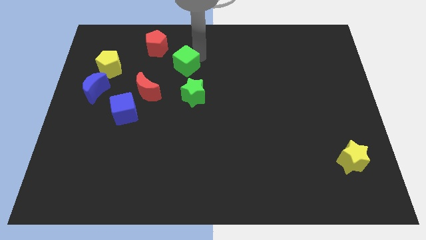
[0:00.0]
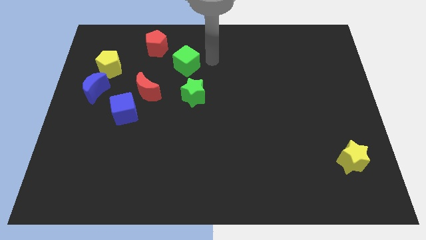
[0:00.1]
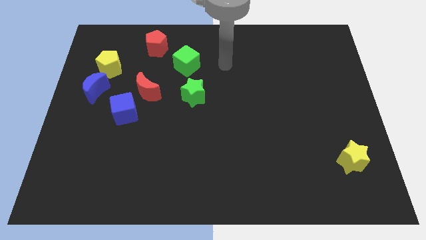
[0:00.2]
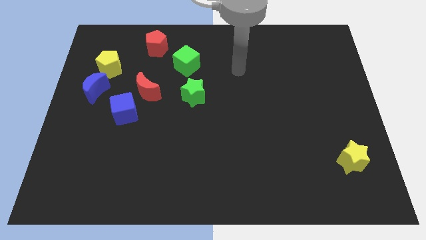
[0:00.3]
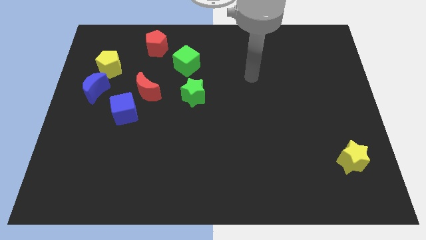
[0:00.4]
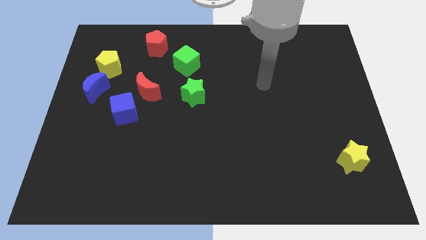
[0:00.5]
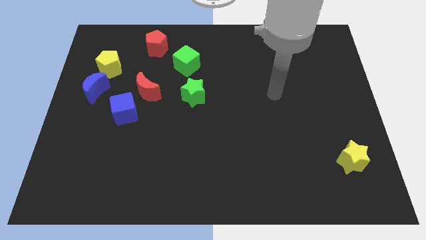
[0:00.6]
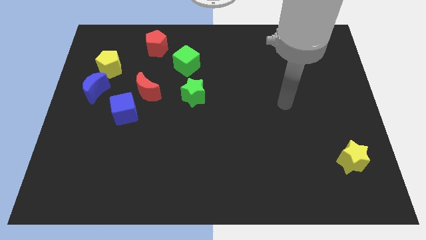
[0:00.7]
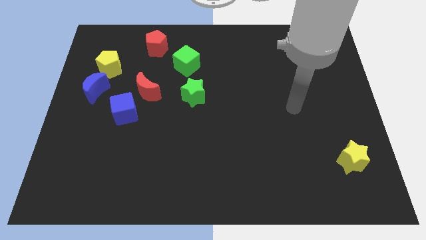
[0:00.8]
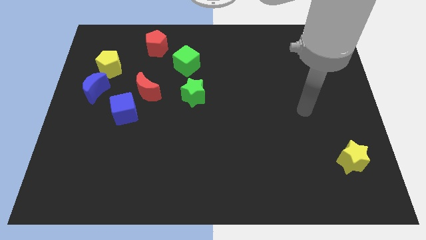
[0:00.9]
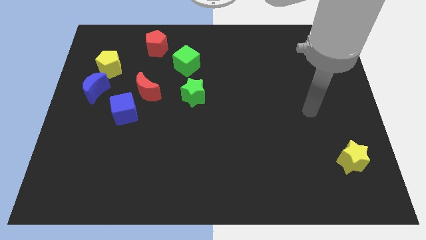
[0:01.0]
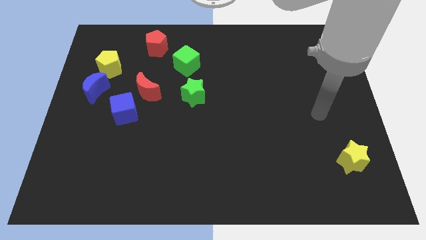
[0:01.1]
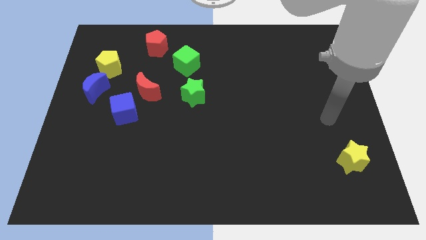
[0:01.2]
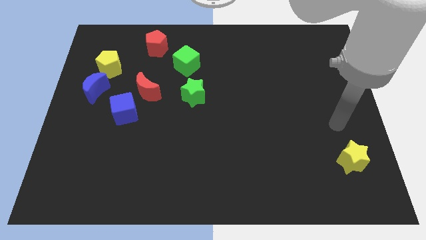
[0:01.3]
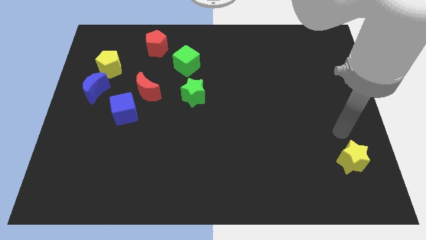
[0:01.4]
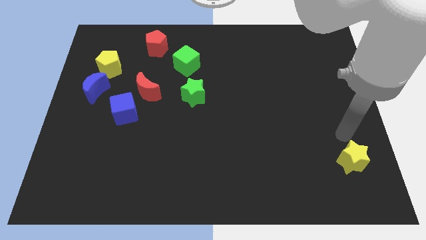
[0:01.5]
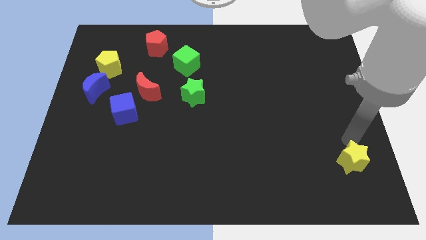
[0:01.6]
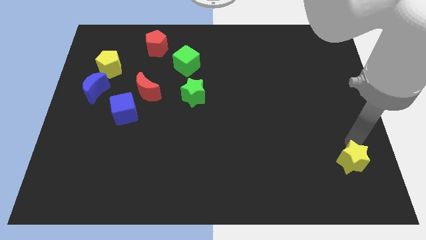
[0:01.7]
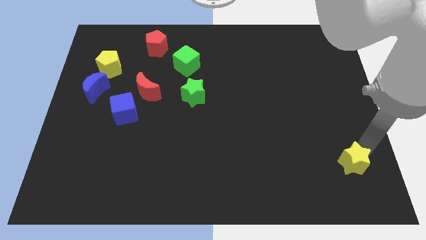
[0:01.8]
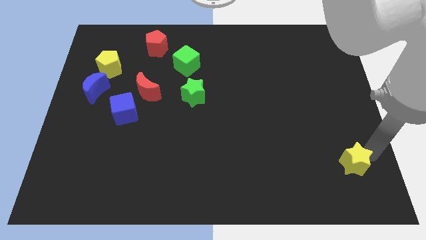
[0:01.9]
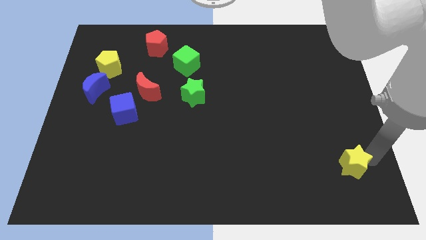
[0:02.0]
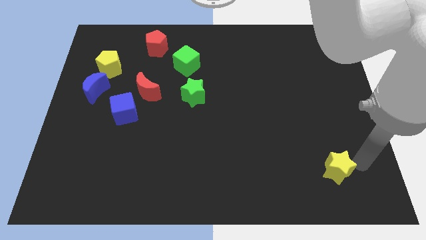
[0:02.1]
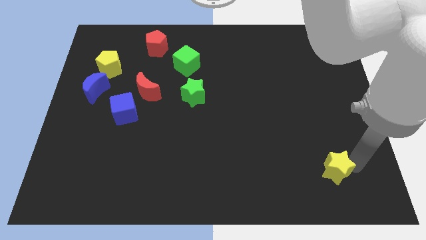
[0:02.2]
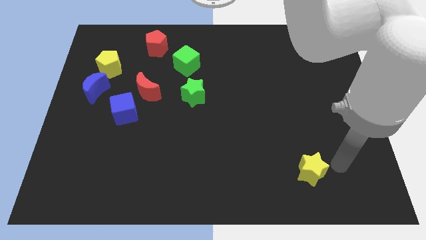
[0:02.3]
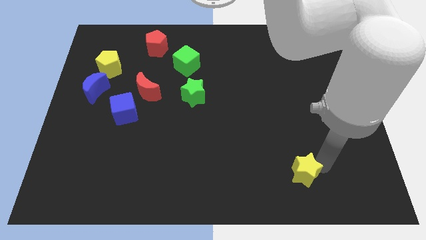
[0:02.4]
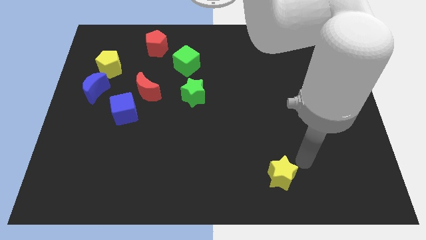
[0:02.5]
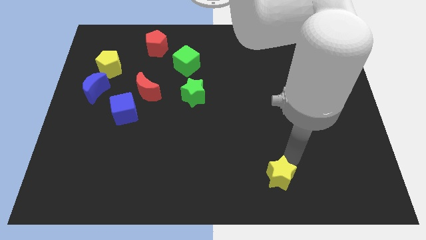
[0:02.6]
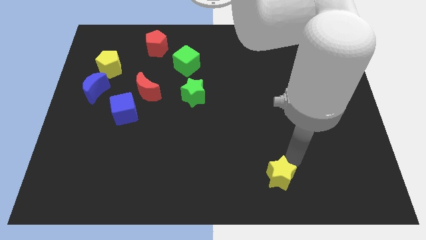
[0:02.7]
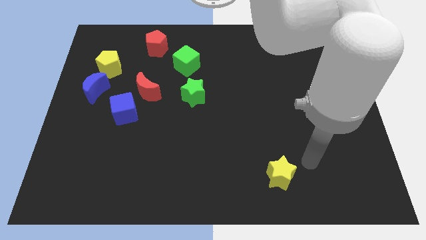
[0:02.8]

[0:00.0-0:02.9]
slightly push the yellow star to the left side

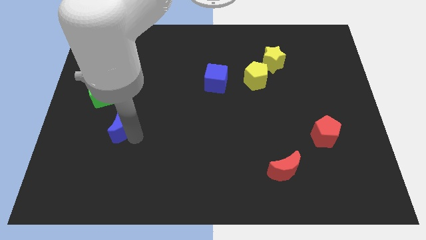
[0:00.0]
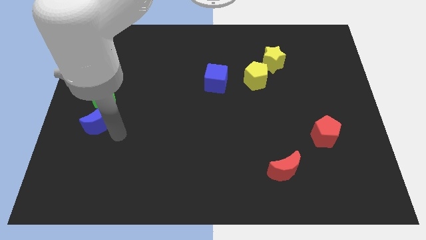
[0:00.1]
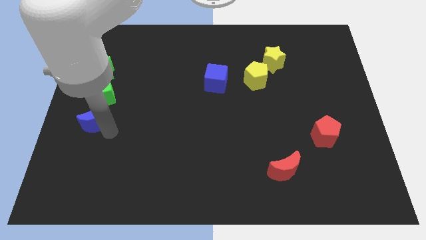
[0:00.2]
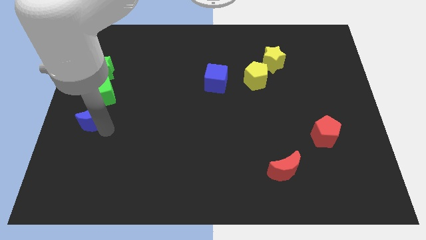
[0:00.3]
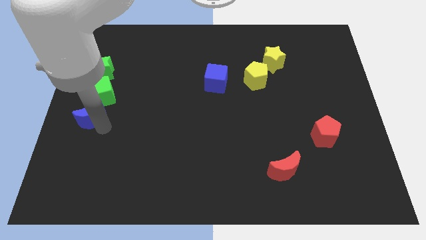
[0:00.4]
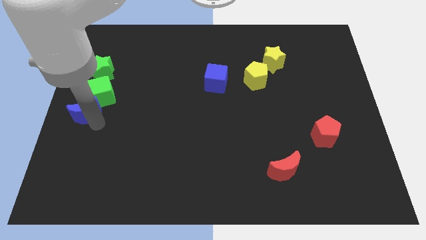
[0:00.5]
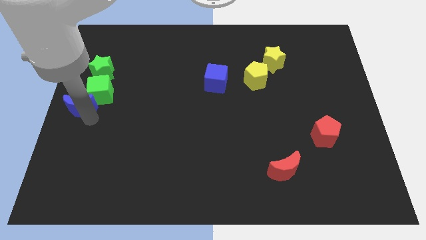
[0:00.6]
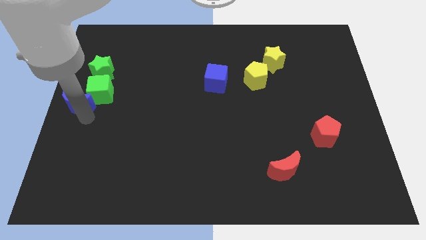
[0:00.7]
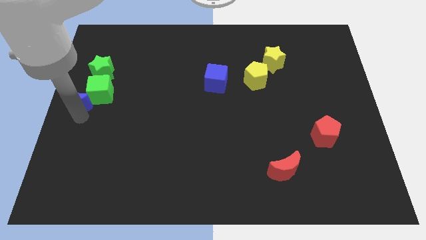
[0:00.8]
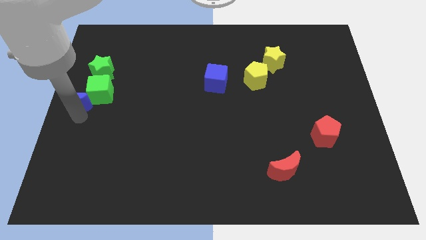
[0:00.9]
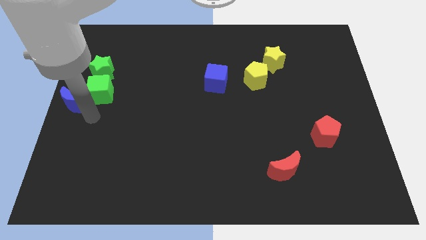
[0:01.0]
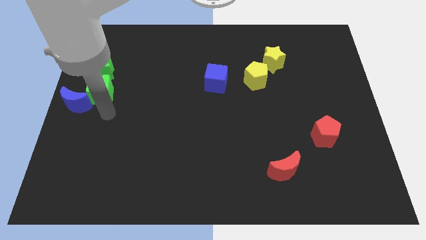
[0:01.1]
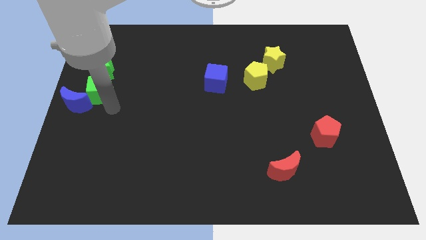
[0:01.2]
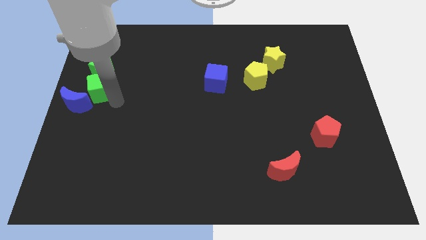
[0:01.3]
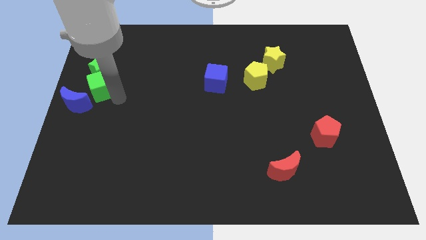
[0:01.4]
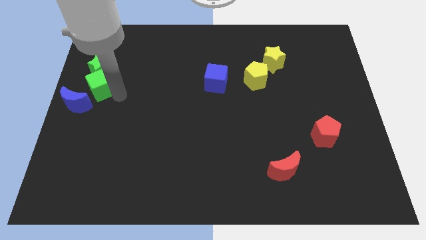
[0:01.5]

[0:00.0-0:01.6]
place the blue moon at the center left corner

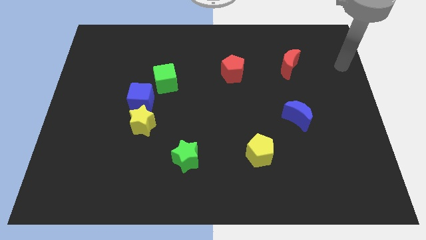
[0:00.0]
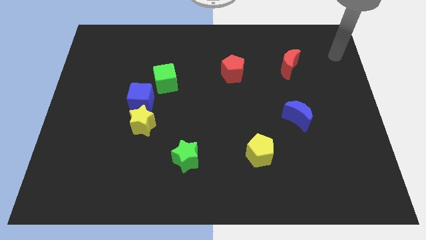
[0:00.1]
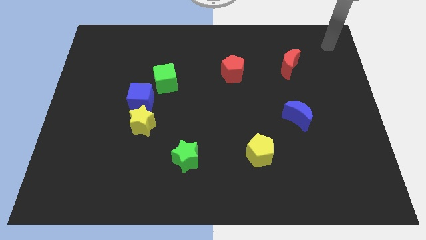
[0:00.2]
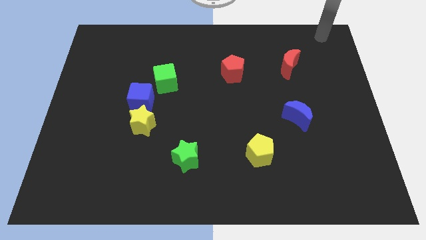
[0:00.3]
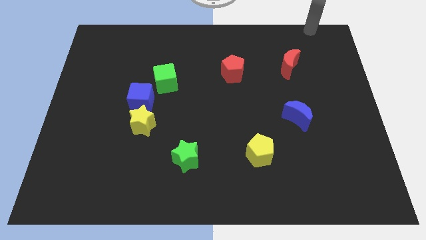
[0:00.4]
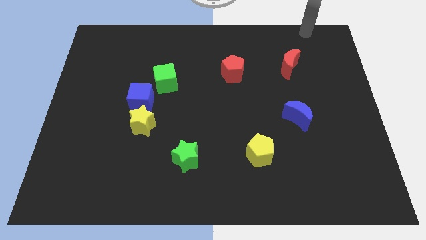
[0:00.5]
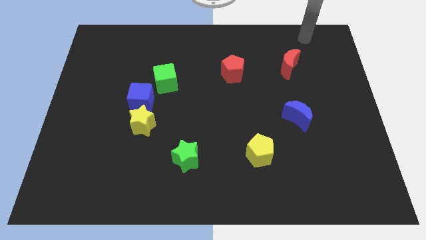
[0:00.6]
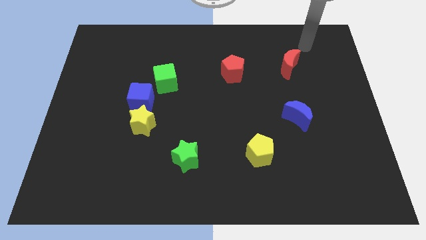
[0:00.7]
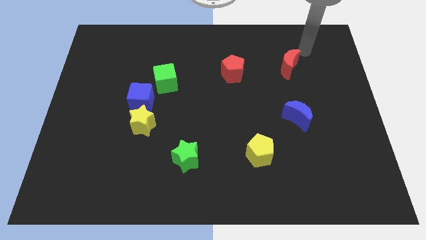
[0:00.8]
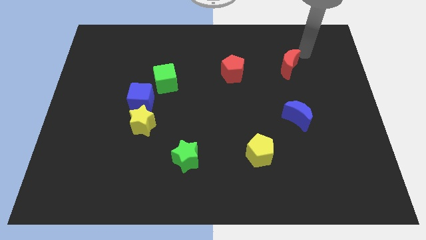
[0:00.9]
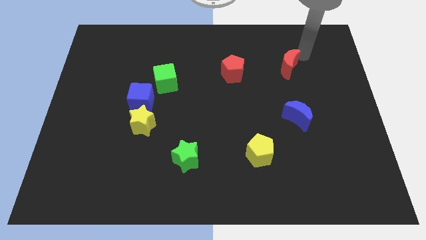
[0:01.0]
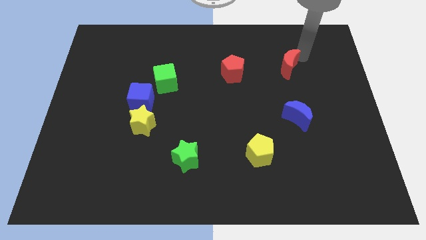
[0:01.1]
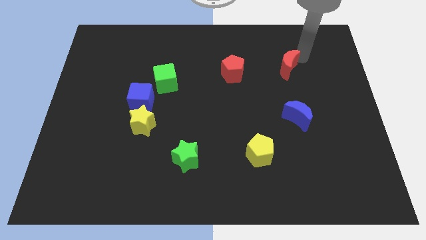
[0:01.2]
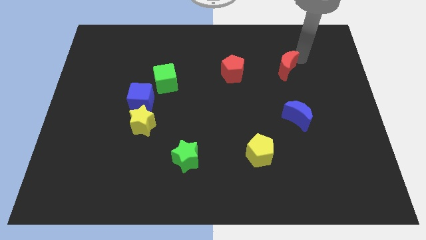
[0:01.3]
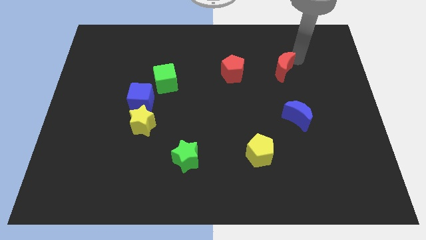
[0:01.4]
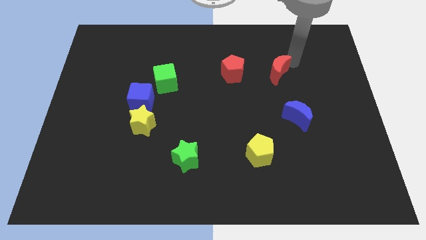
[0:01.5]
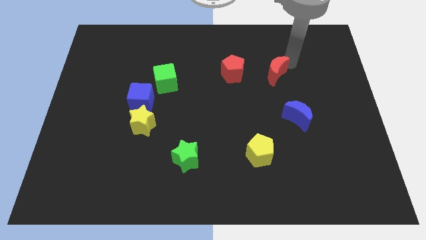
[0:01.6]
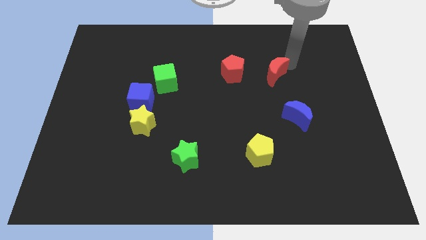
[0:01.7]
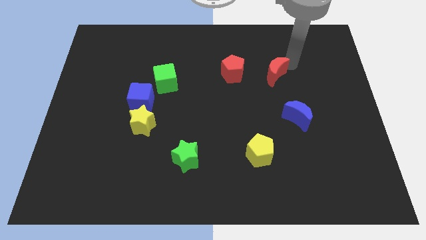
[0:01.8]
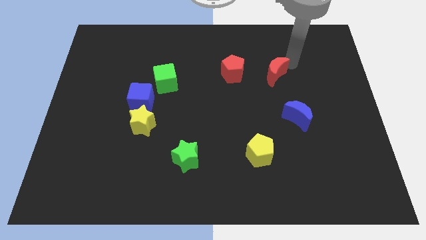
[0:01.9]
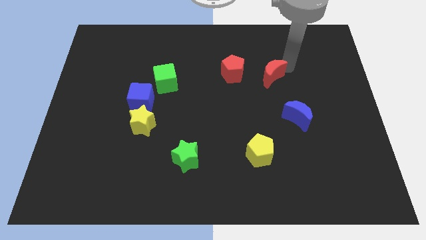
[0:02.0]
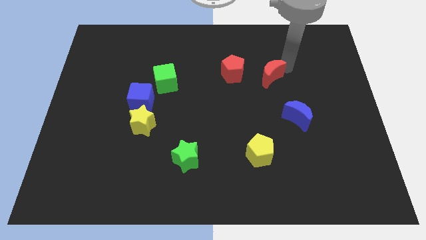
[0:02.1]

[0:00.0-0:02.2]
move the red moon slightly towards the red pentagon

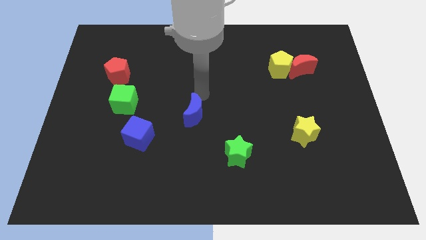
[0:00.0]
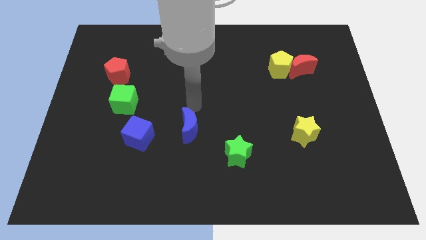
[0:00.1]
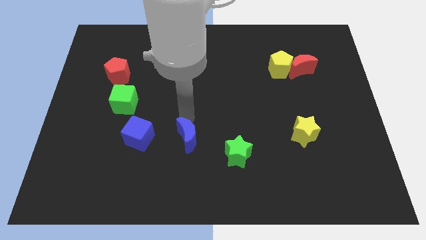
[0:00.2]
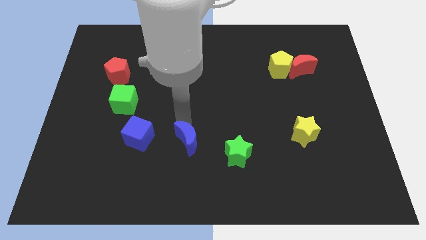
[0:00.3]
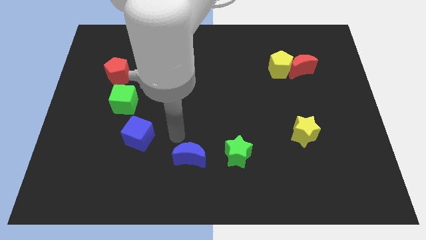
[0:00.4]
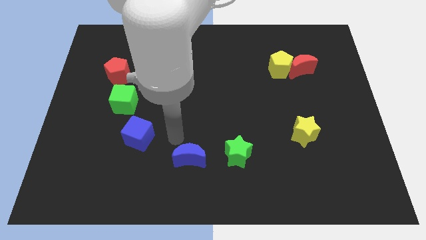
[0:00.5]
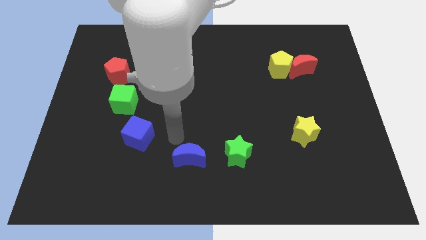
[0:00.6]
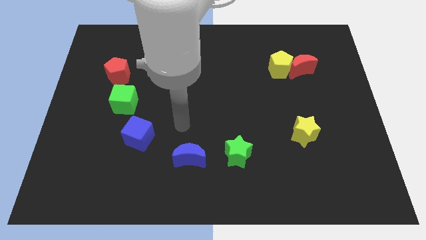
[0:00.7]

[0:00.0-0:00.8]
place blue crescent in between blue cube and green star

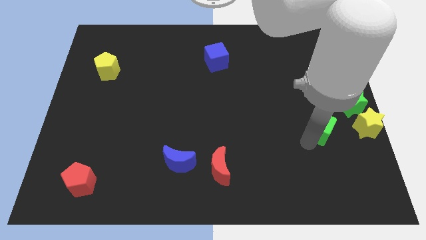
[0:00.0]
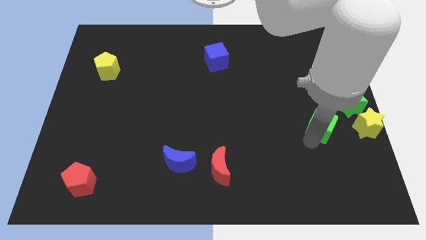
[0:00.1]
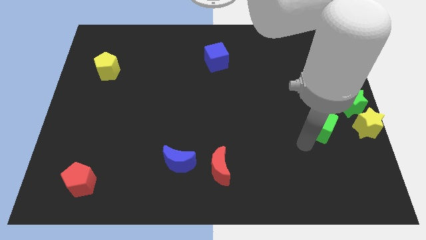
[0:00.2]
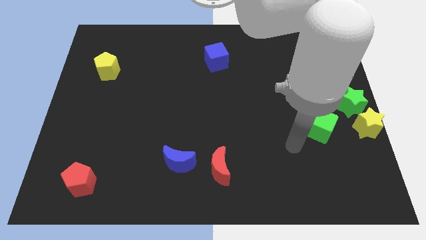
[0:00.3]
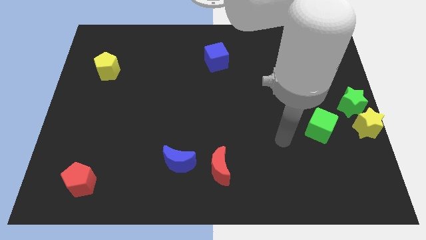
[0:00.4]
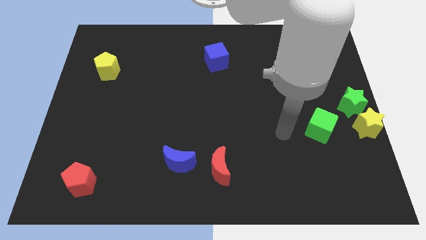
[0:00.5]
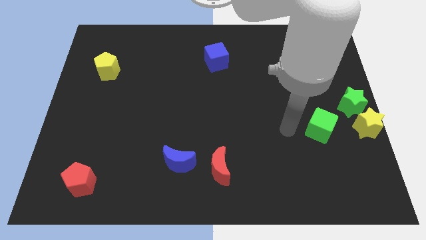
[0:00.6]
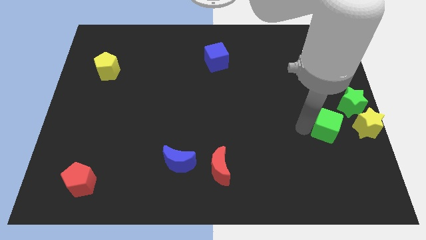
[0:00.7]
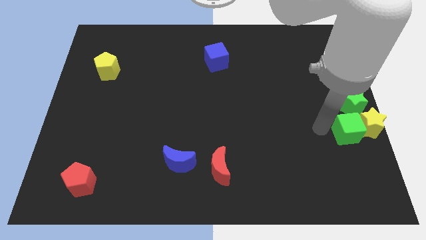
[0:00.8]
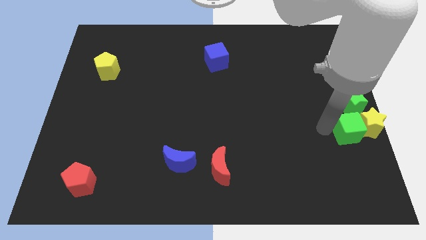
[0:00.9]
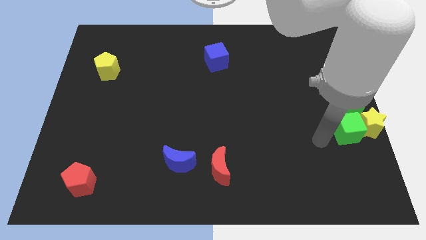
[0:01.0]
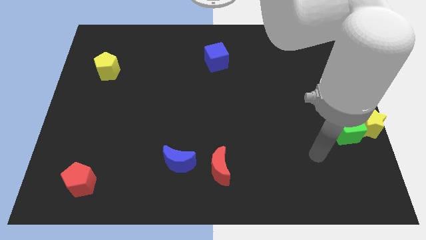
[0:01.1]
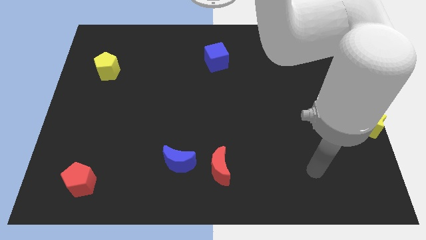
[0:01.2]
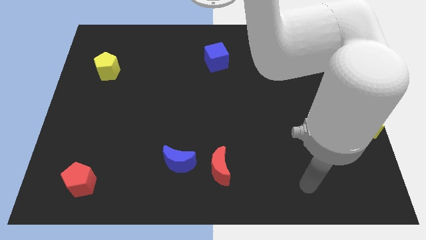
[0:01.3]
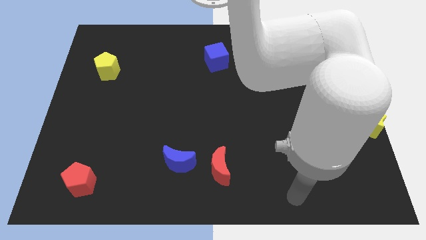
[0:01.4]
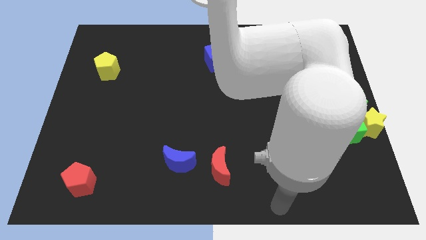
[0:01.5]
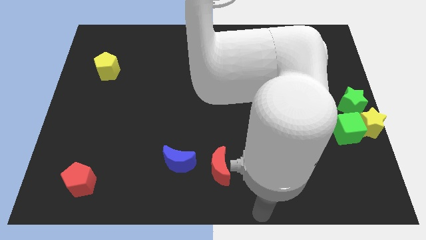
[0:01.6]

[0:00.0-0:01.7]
push the green cube into the yellow star
